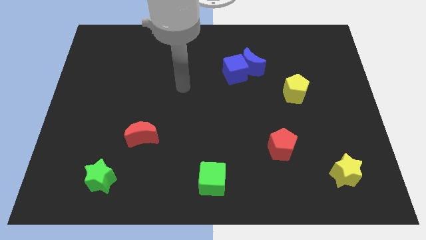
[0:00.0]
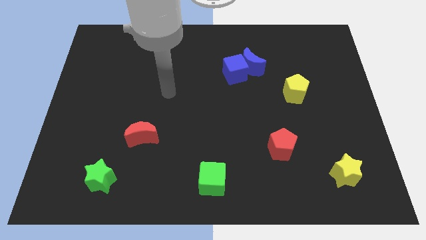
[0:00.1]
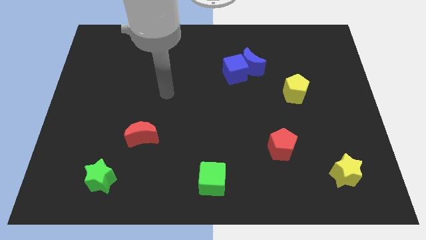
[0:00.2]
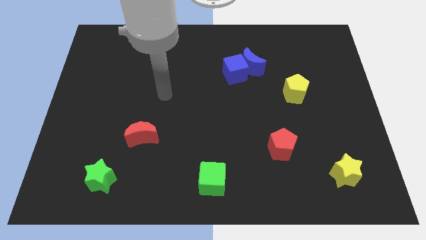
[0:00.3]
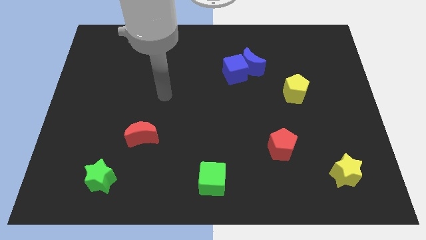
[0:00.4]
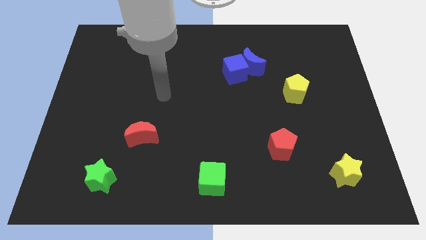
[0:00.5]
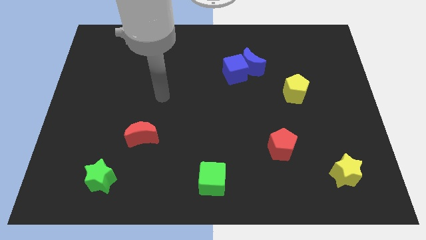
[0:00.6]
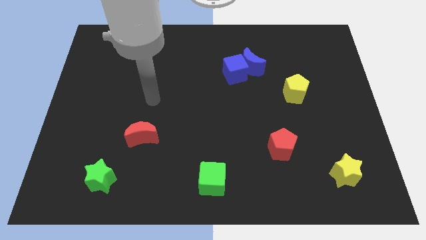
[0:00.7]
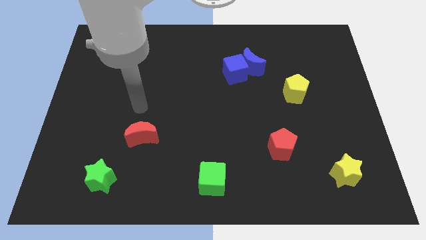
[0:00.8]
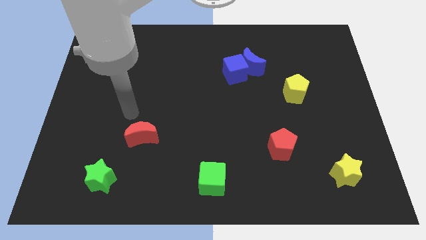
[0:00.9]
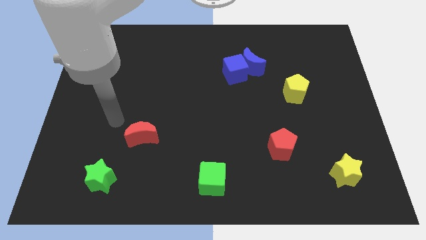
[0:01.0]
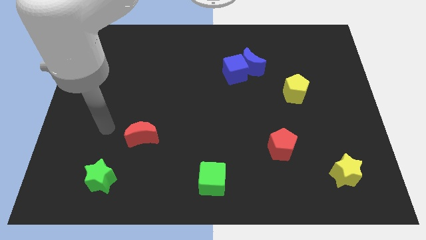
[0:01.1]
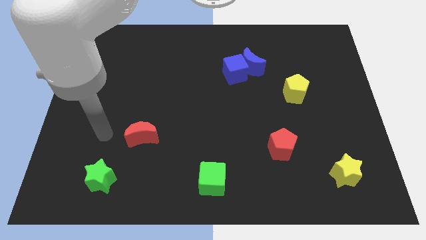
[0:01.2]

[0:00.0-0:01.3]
point your hand above the green star

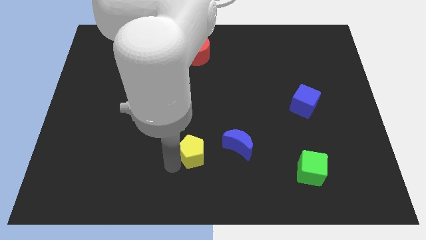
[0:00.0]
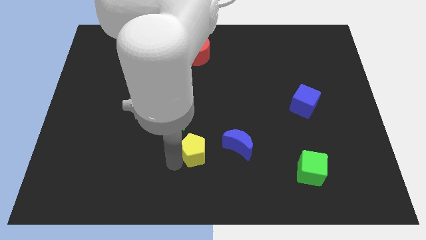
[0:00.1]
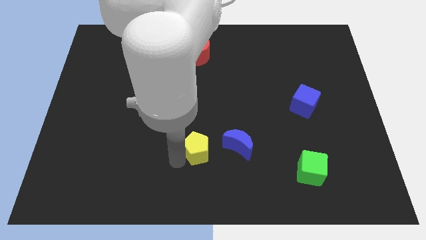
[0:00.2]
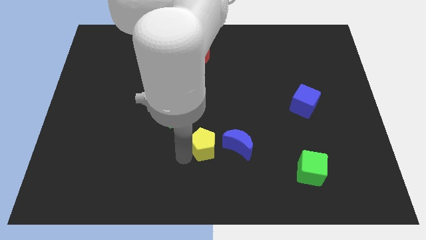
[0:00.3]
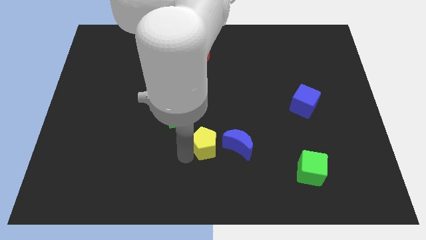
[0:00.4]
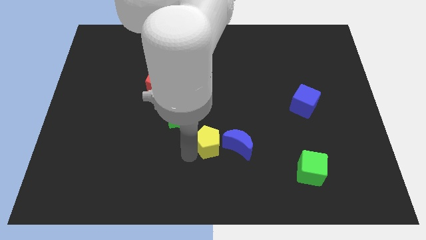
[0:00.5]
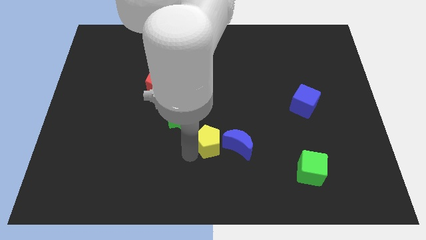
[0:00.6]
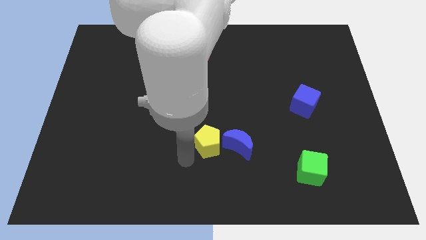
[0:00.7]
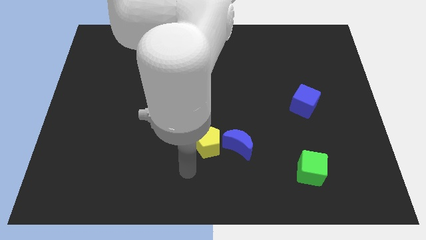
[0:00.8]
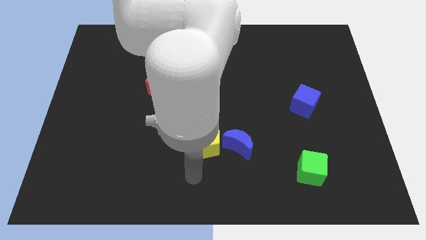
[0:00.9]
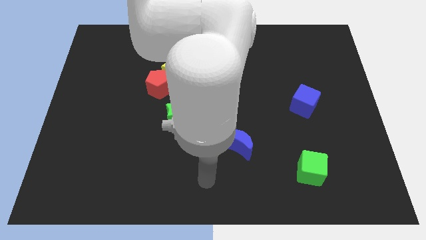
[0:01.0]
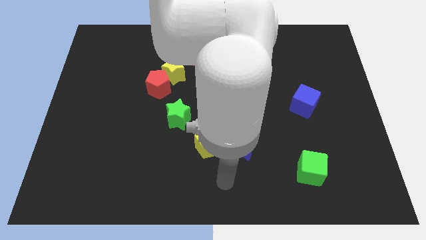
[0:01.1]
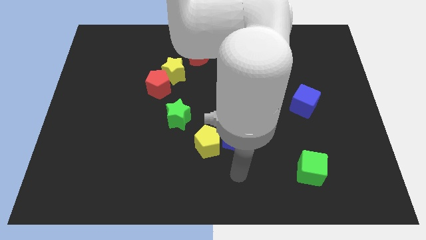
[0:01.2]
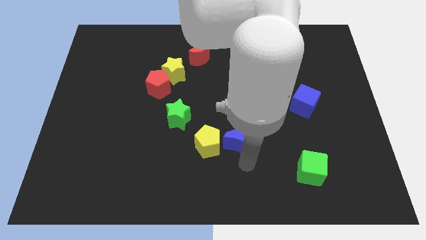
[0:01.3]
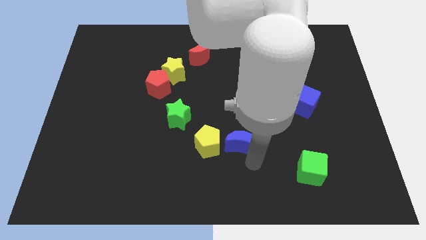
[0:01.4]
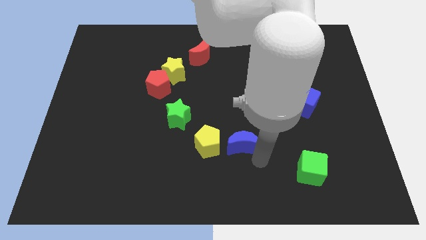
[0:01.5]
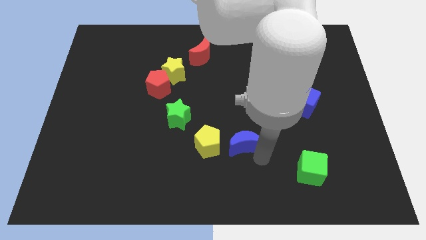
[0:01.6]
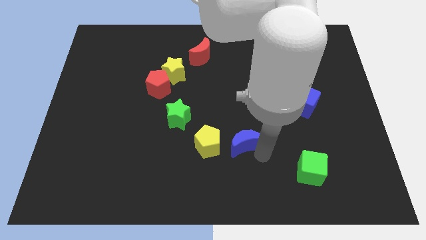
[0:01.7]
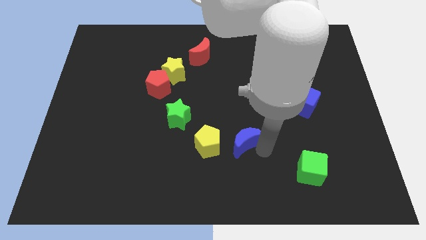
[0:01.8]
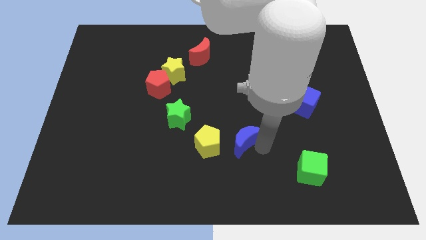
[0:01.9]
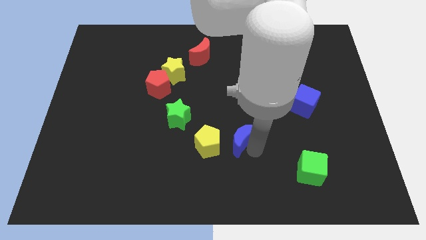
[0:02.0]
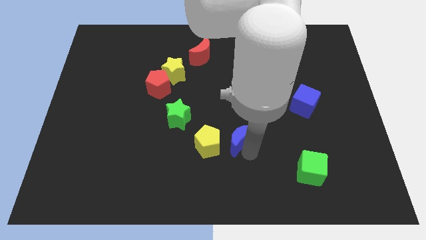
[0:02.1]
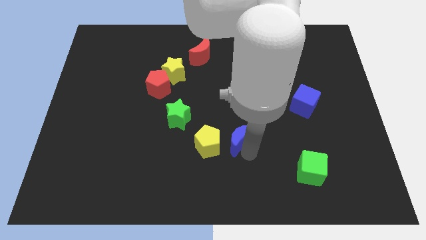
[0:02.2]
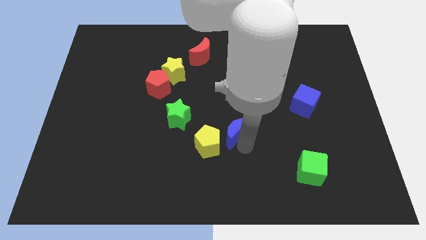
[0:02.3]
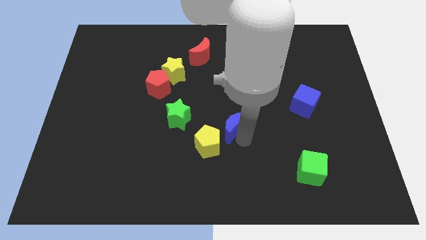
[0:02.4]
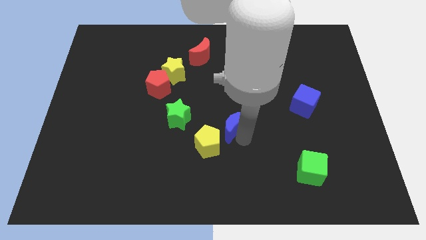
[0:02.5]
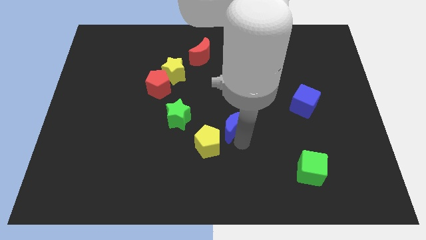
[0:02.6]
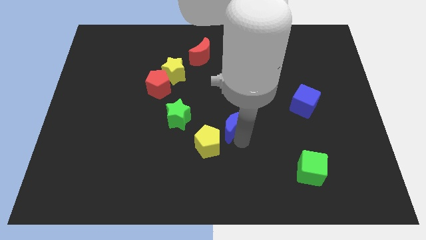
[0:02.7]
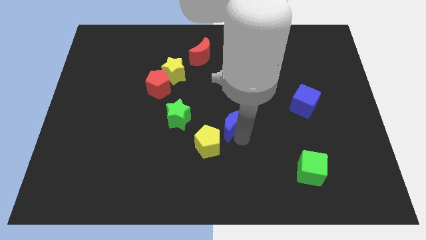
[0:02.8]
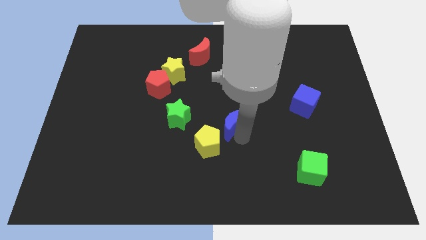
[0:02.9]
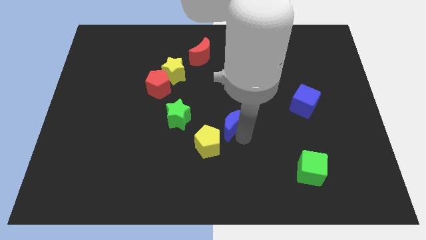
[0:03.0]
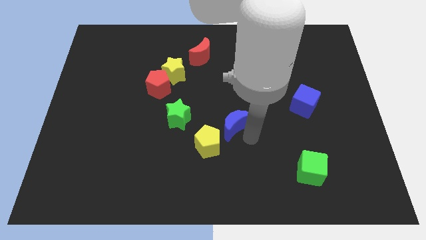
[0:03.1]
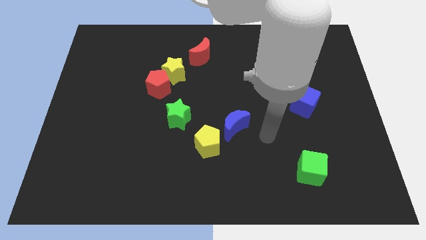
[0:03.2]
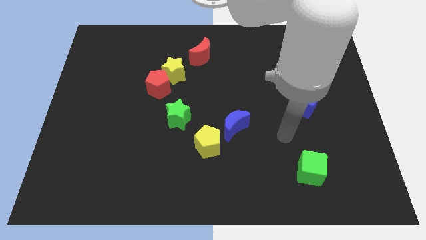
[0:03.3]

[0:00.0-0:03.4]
place the blue moon and the yellow pentagon in a diagonal line

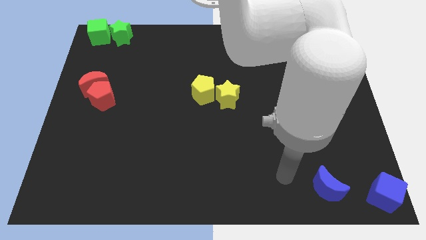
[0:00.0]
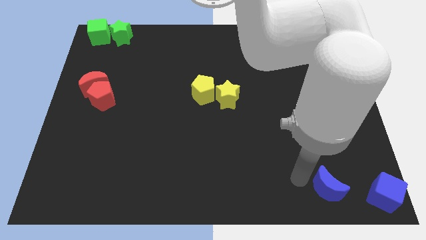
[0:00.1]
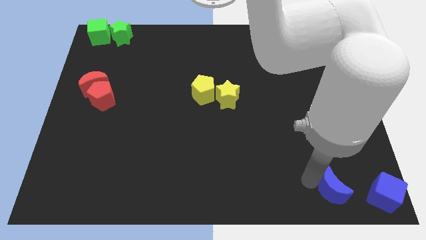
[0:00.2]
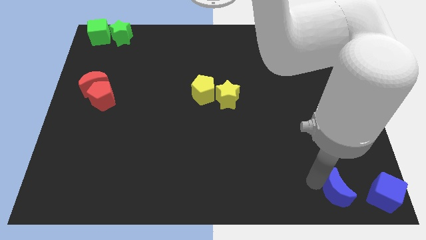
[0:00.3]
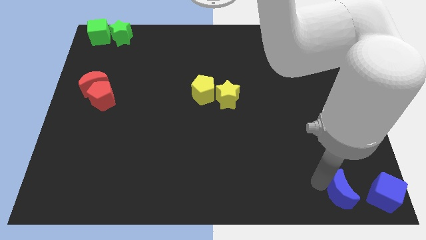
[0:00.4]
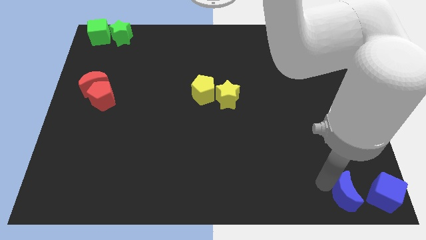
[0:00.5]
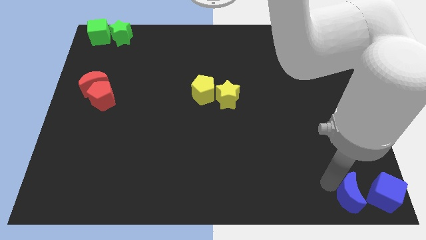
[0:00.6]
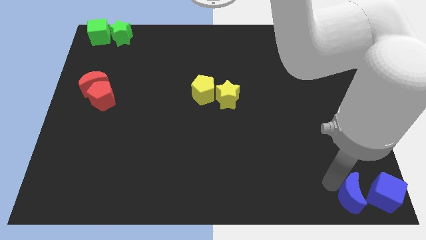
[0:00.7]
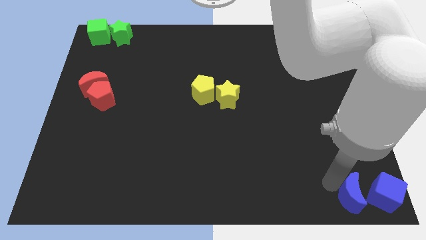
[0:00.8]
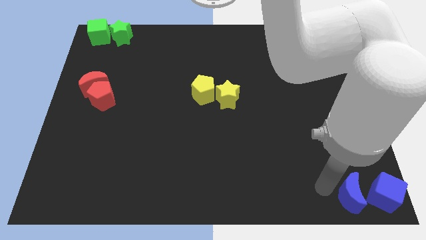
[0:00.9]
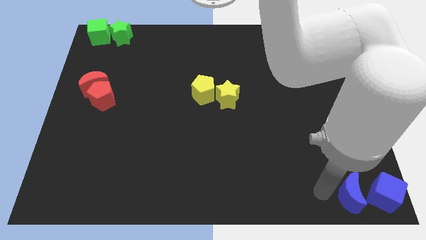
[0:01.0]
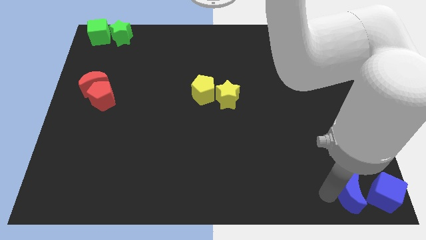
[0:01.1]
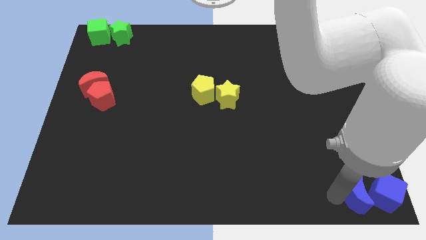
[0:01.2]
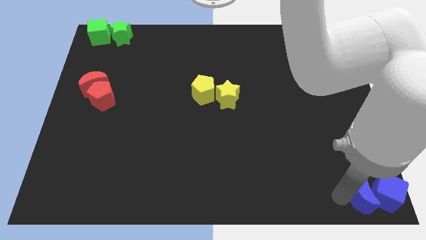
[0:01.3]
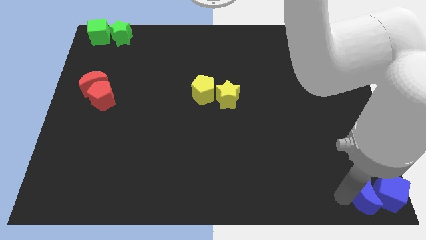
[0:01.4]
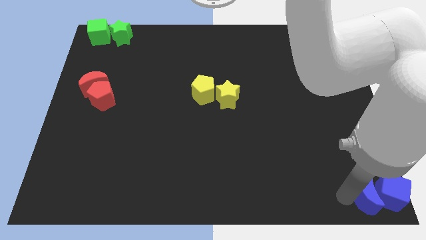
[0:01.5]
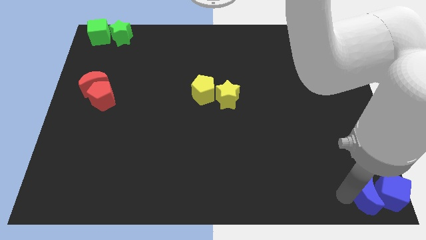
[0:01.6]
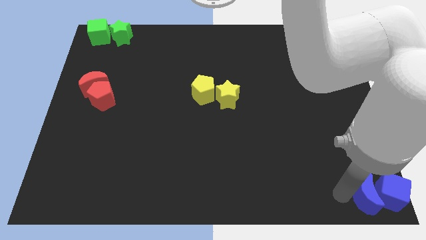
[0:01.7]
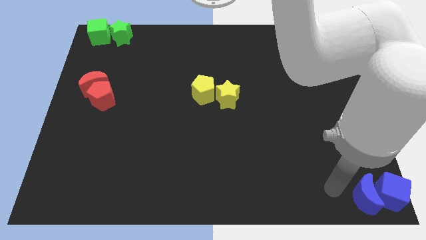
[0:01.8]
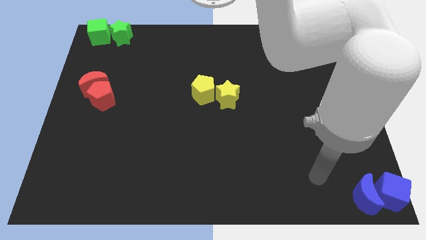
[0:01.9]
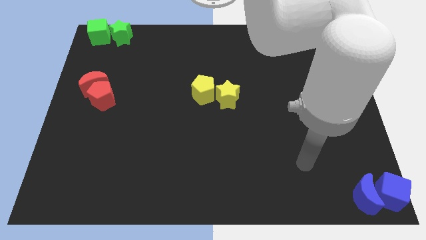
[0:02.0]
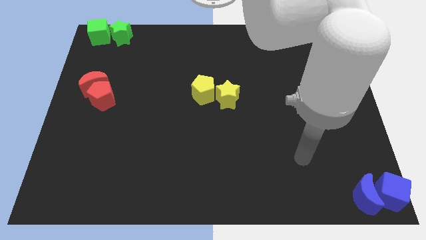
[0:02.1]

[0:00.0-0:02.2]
push the blue moon into the blue cube

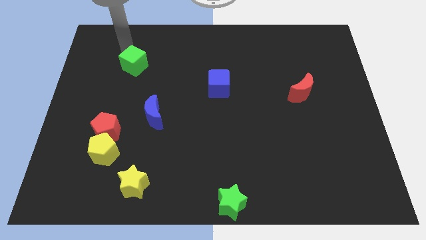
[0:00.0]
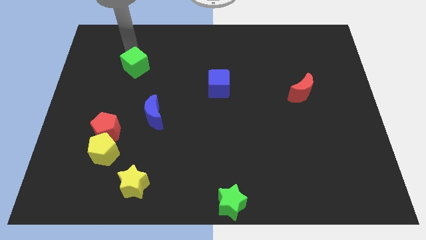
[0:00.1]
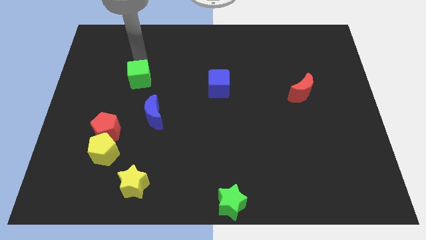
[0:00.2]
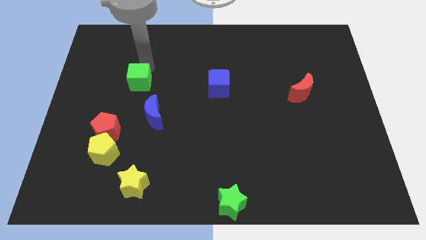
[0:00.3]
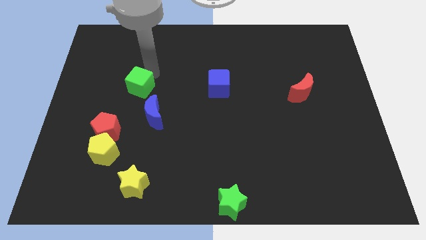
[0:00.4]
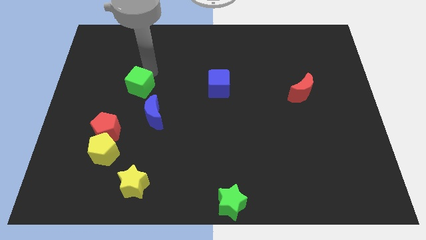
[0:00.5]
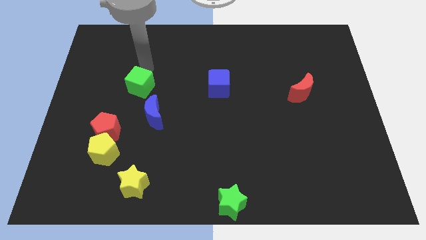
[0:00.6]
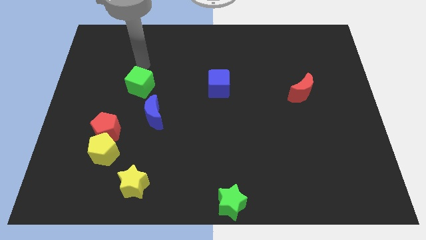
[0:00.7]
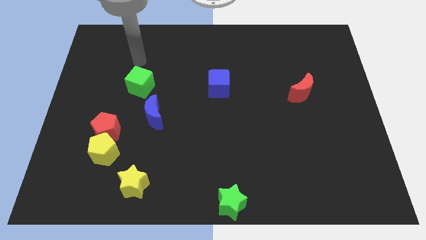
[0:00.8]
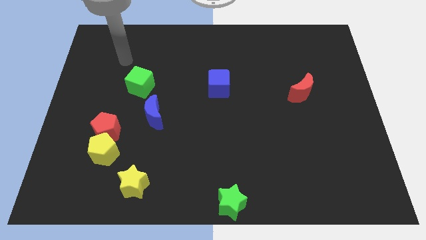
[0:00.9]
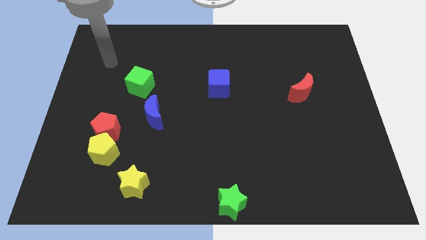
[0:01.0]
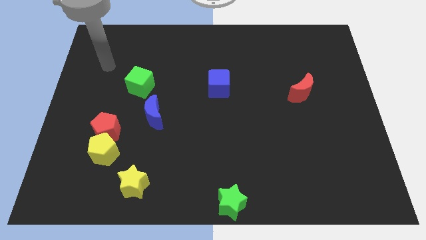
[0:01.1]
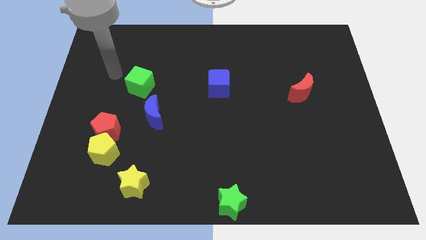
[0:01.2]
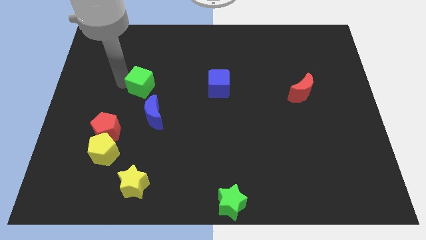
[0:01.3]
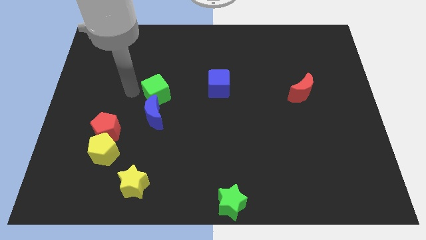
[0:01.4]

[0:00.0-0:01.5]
place the green cube above the blue moon

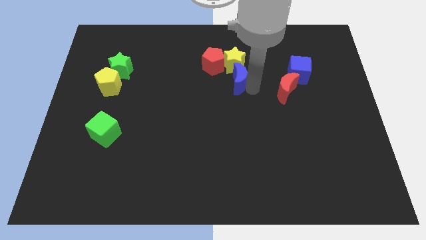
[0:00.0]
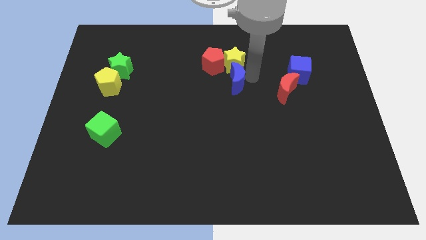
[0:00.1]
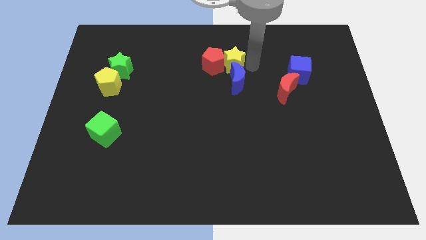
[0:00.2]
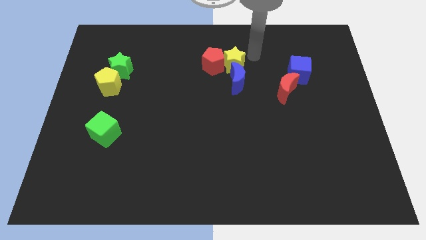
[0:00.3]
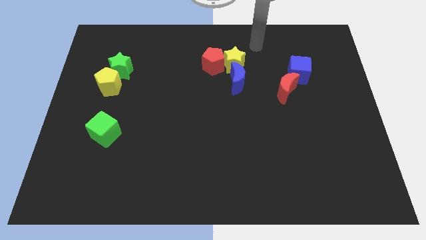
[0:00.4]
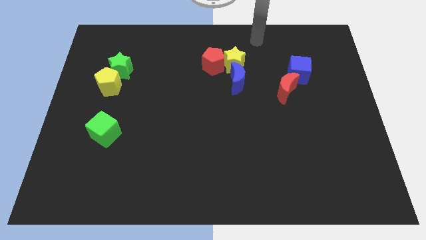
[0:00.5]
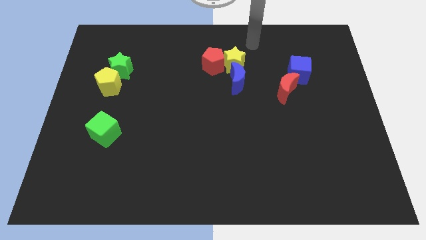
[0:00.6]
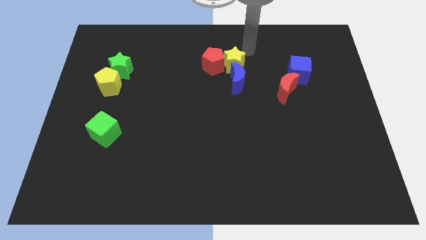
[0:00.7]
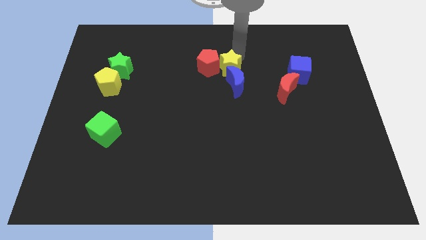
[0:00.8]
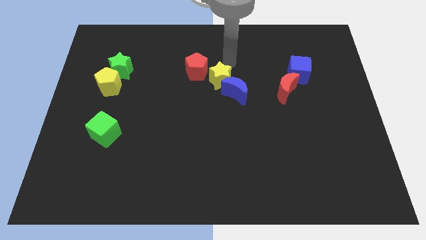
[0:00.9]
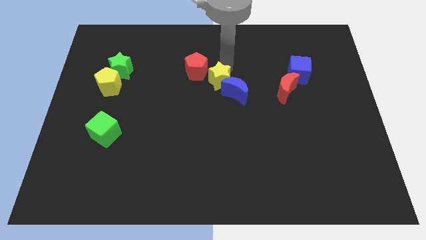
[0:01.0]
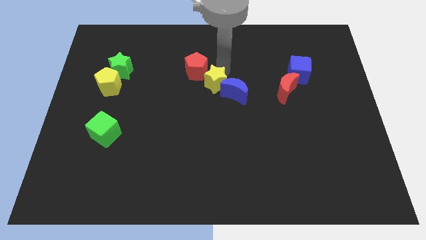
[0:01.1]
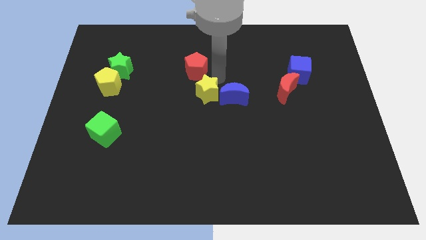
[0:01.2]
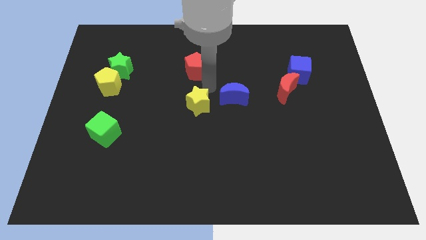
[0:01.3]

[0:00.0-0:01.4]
push yellow star below red pentagon
